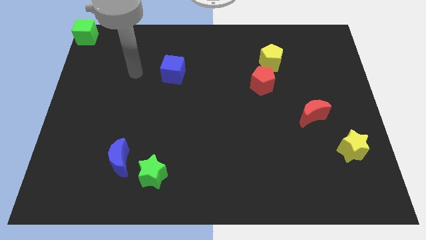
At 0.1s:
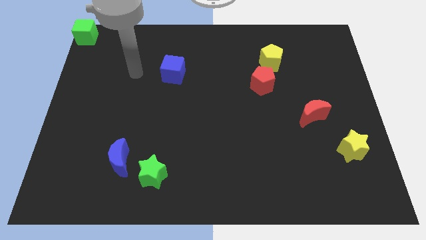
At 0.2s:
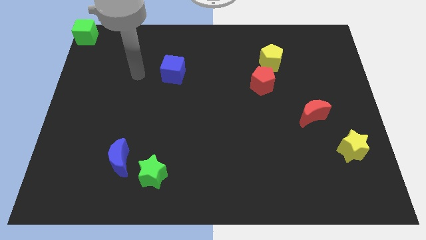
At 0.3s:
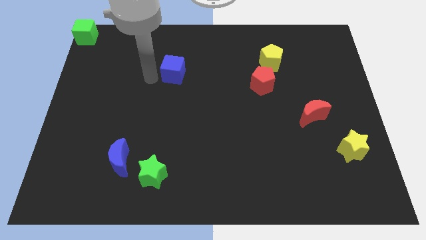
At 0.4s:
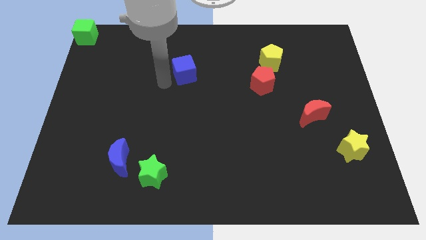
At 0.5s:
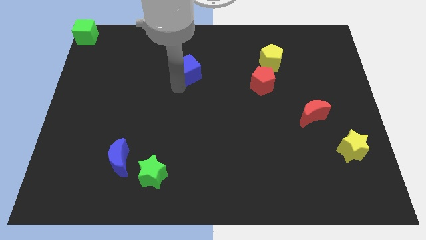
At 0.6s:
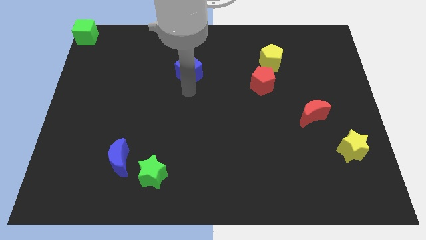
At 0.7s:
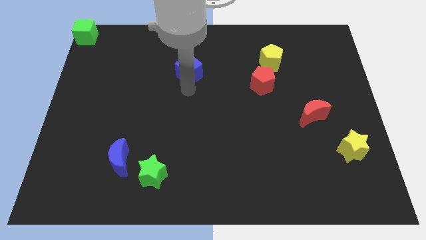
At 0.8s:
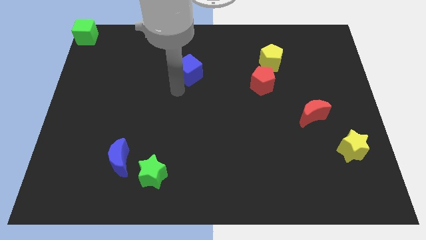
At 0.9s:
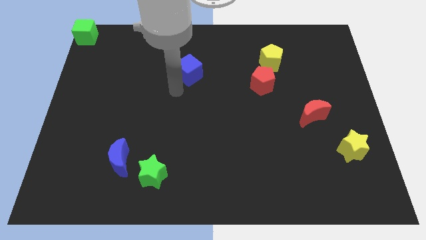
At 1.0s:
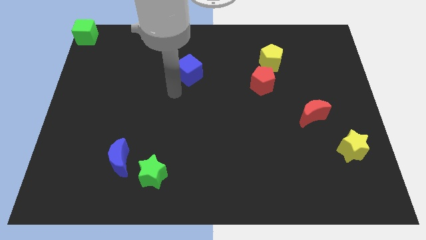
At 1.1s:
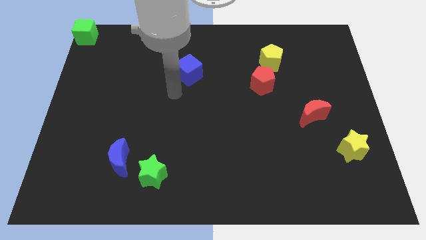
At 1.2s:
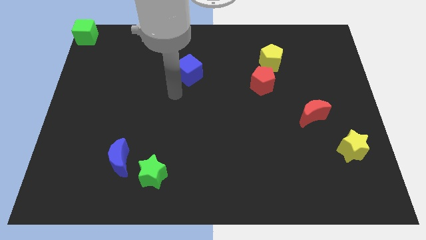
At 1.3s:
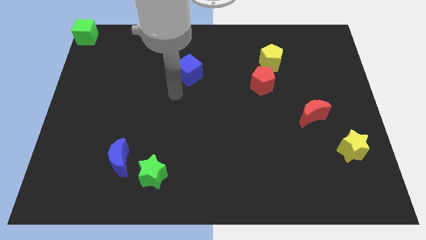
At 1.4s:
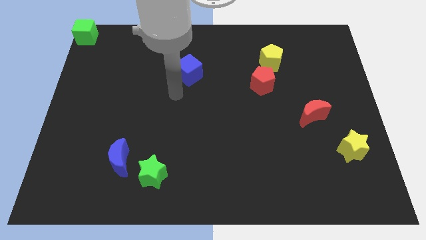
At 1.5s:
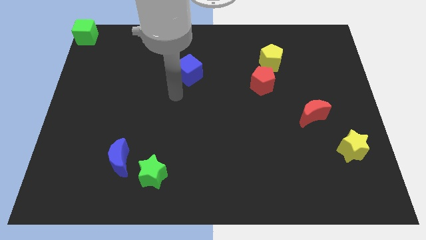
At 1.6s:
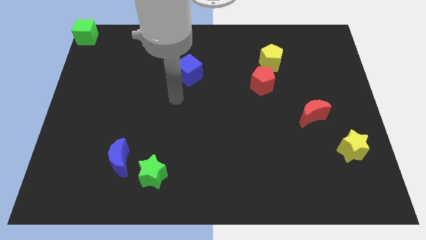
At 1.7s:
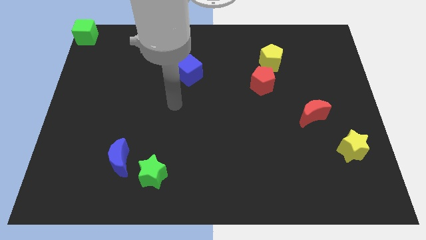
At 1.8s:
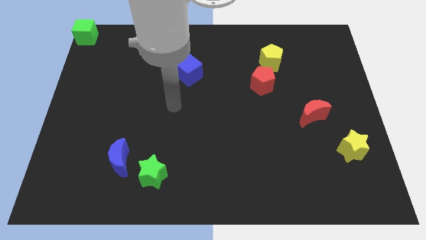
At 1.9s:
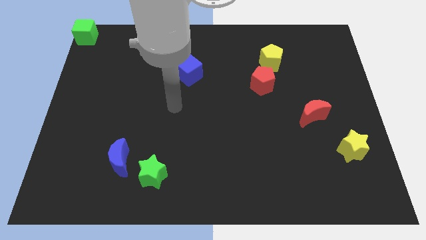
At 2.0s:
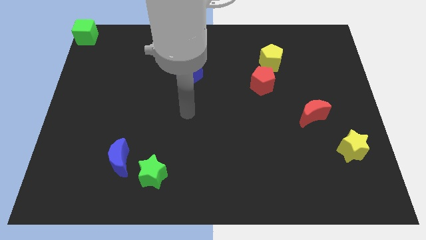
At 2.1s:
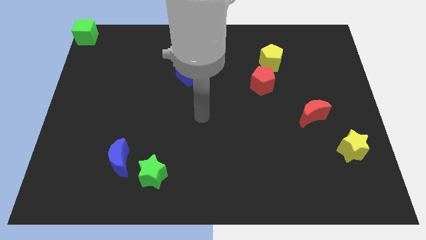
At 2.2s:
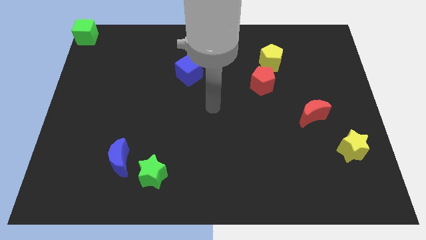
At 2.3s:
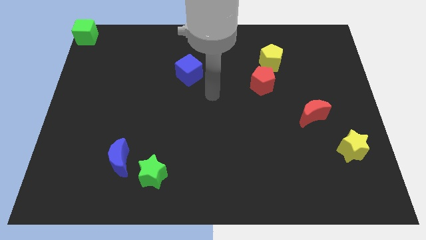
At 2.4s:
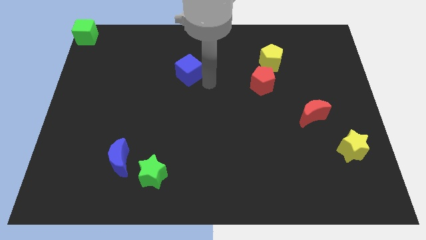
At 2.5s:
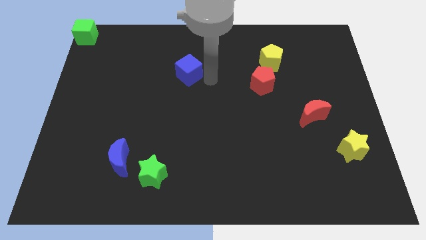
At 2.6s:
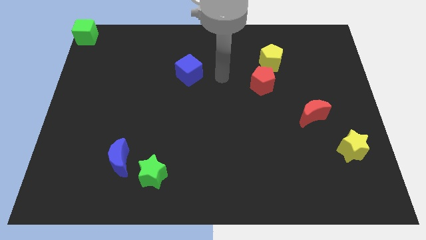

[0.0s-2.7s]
move the blue cube slightly to the right

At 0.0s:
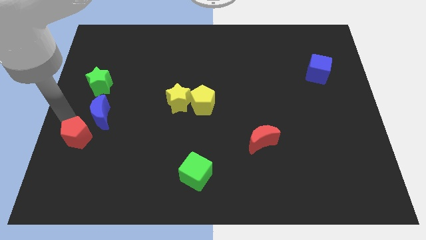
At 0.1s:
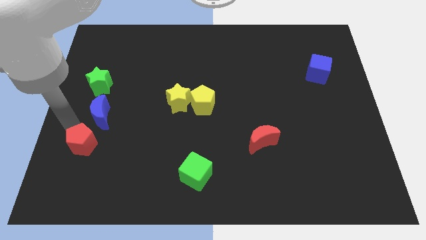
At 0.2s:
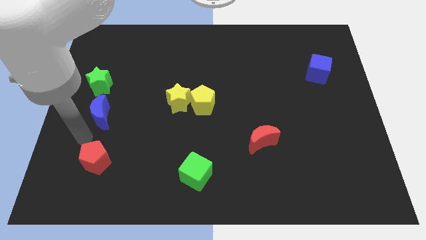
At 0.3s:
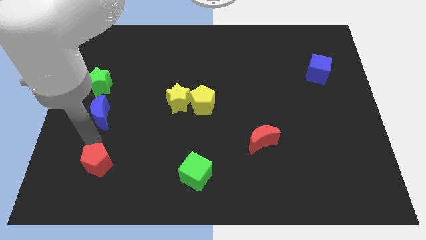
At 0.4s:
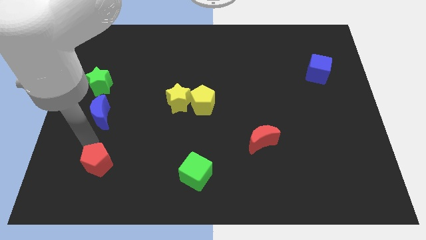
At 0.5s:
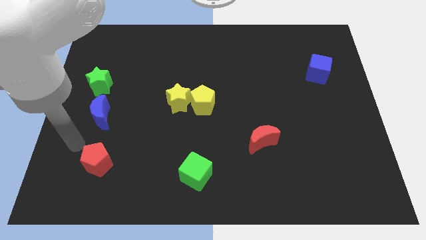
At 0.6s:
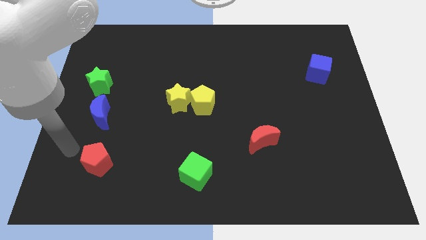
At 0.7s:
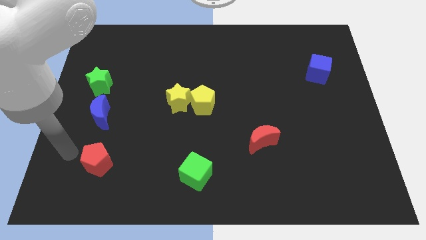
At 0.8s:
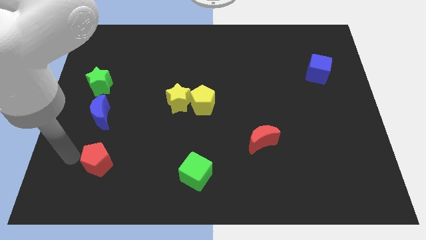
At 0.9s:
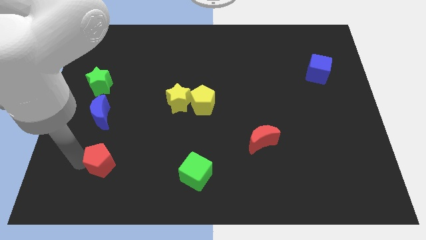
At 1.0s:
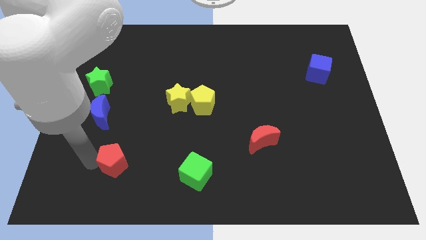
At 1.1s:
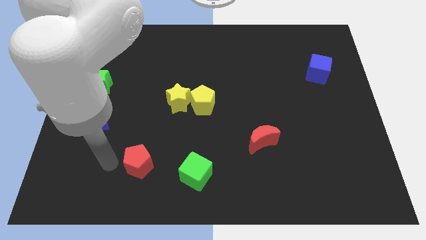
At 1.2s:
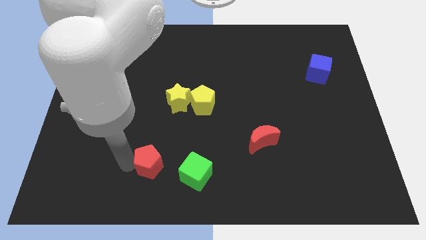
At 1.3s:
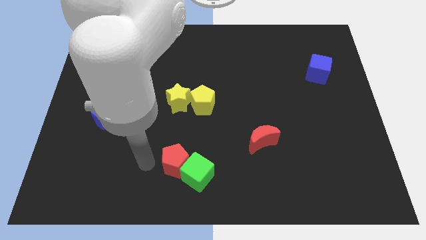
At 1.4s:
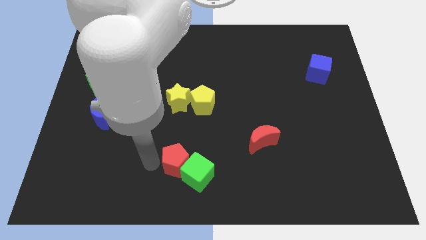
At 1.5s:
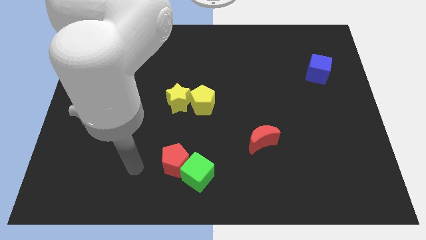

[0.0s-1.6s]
move the red pentagon into the green cube

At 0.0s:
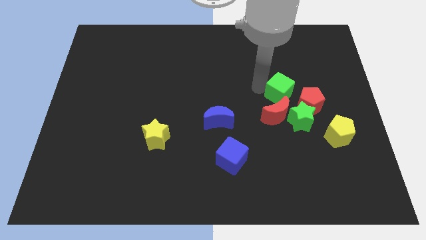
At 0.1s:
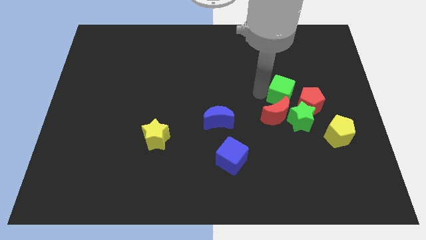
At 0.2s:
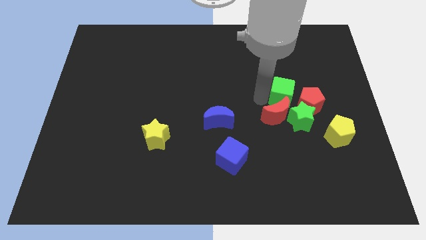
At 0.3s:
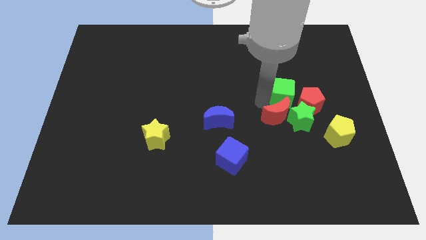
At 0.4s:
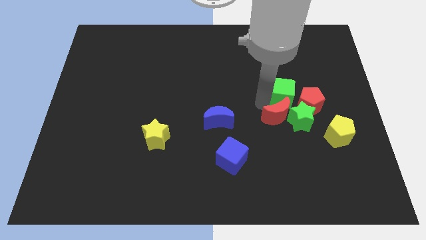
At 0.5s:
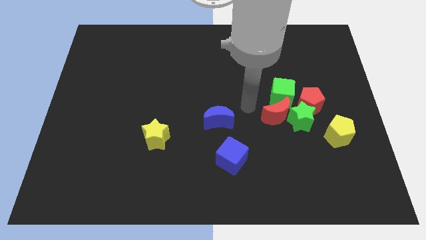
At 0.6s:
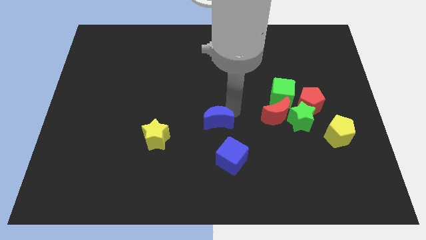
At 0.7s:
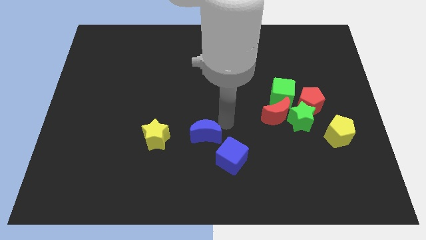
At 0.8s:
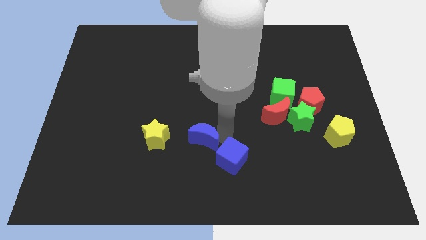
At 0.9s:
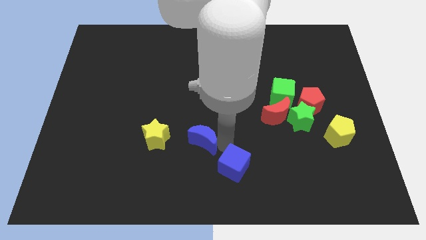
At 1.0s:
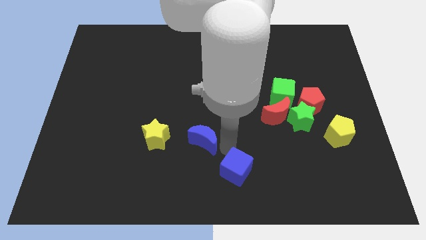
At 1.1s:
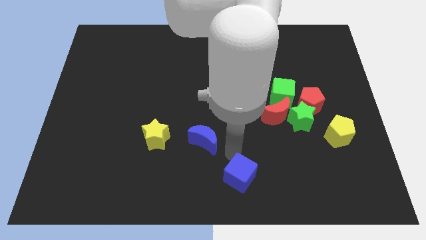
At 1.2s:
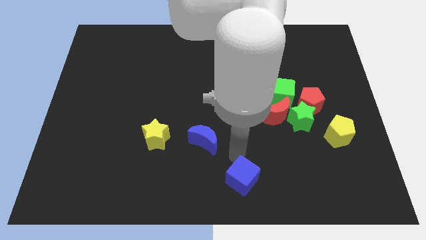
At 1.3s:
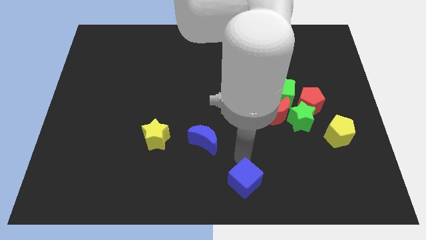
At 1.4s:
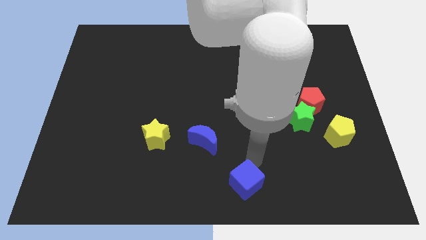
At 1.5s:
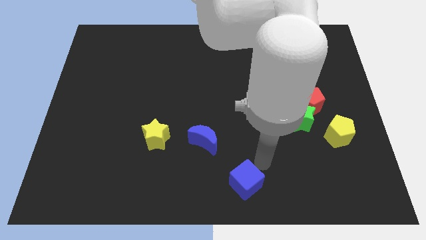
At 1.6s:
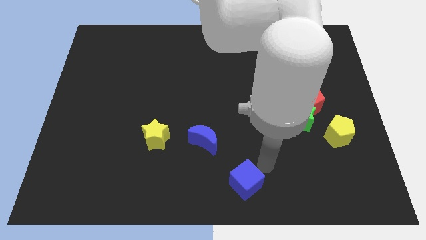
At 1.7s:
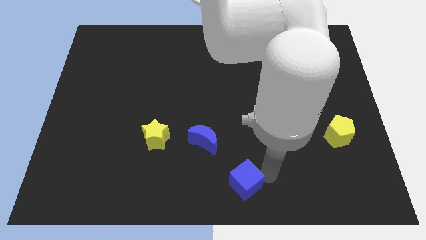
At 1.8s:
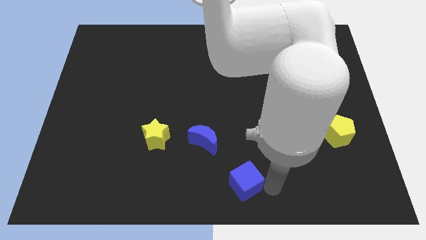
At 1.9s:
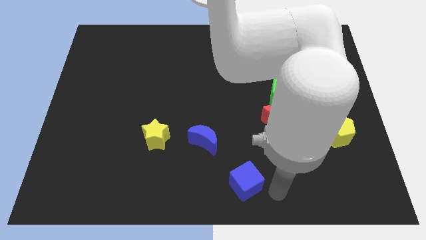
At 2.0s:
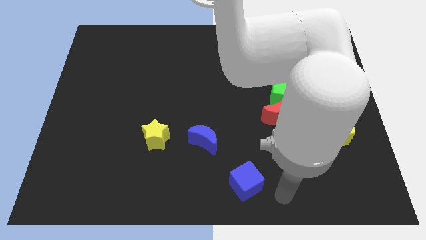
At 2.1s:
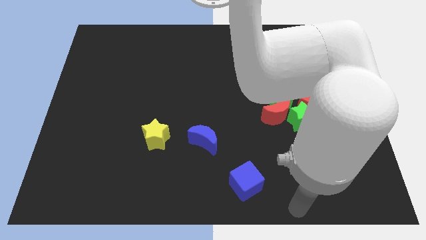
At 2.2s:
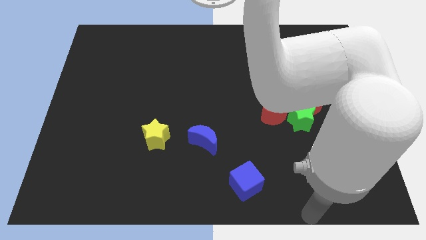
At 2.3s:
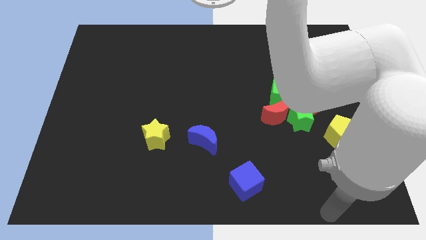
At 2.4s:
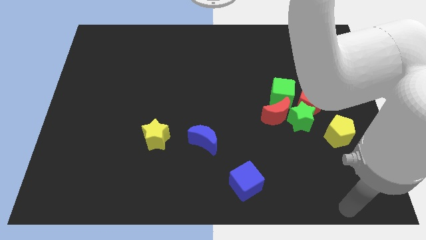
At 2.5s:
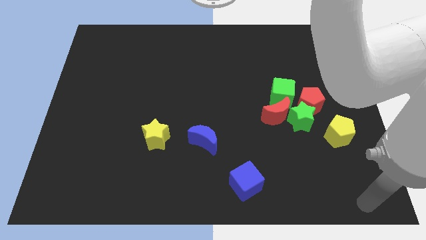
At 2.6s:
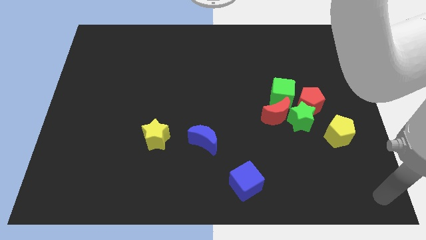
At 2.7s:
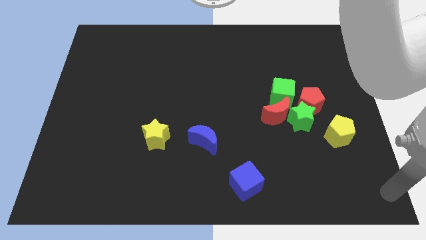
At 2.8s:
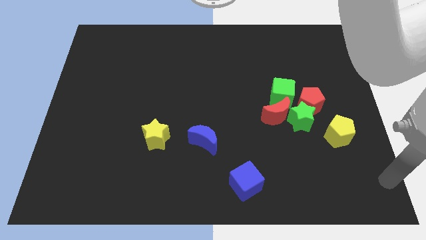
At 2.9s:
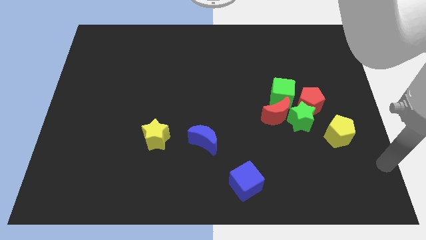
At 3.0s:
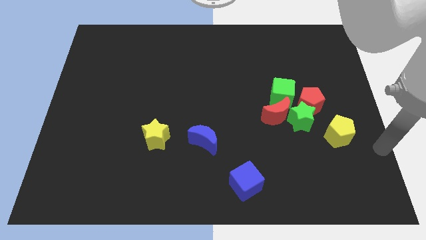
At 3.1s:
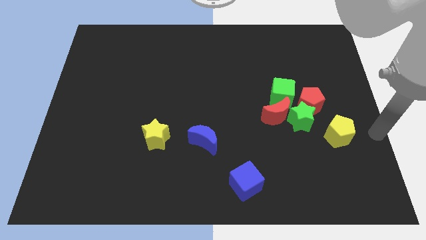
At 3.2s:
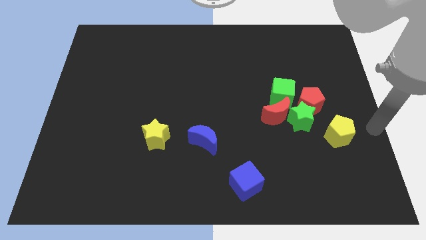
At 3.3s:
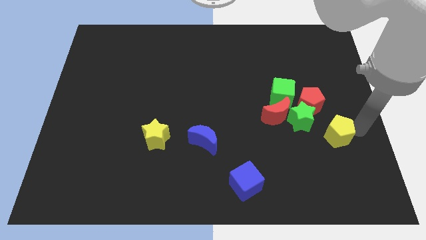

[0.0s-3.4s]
put your arm at the top right side of the yellow pentagon

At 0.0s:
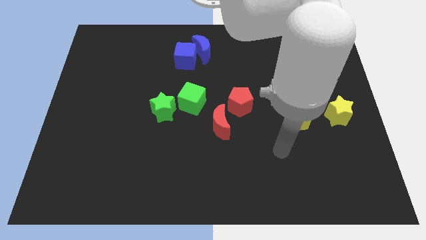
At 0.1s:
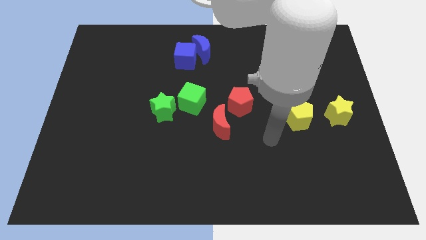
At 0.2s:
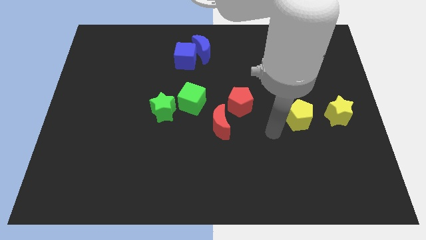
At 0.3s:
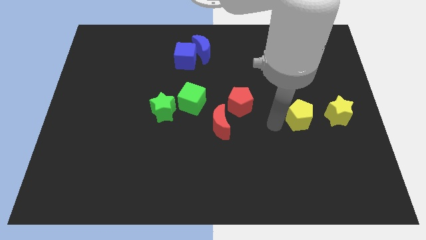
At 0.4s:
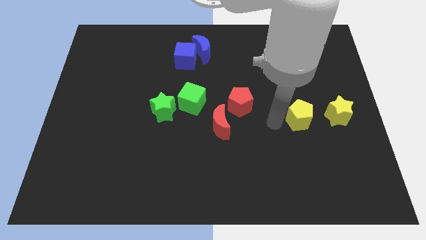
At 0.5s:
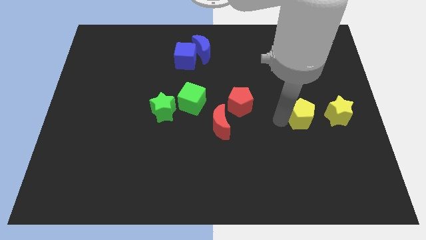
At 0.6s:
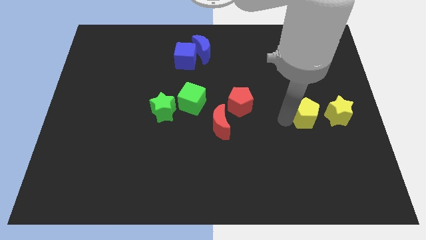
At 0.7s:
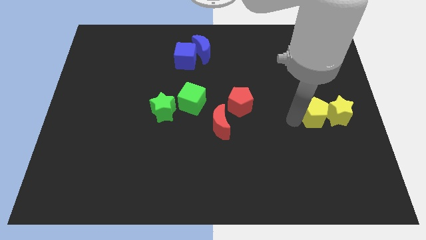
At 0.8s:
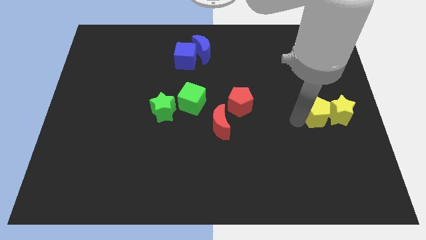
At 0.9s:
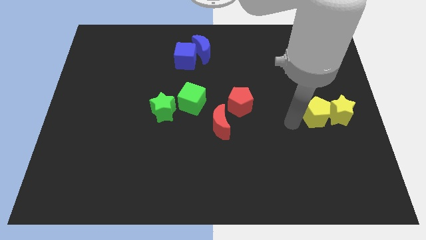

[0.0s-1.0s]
push yellow pentagon in to yellow star

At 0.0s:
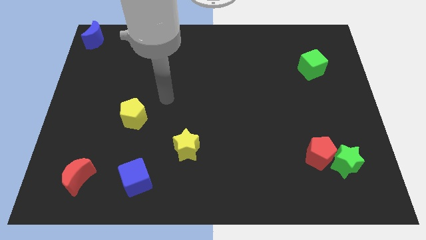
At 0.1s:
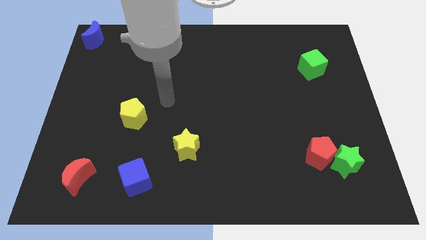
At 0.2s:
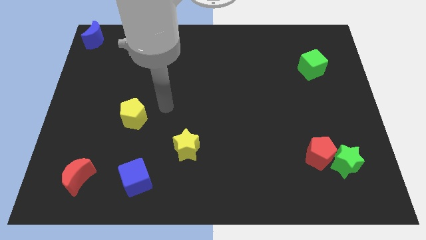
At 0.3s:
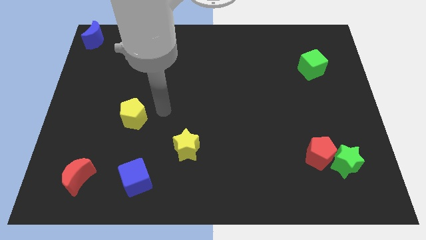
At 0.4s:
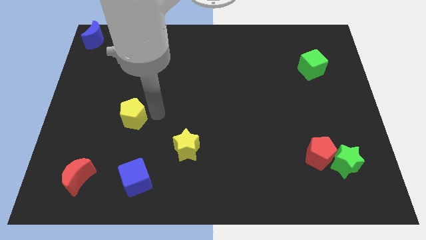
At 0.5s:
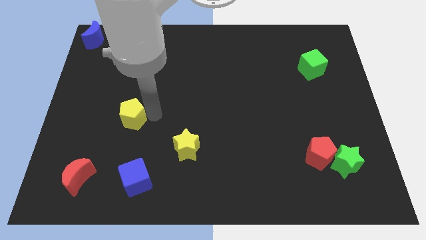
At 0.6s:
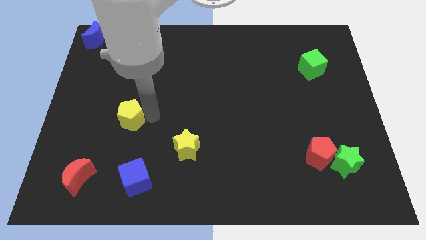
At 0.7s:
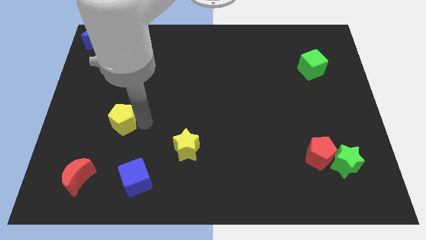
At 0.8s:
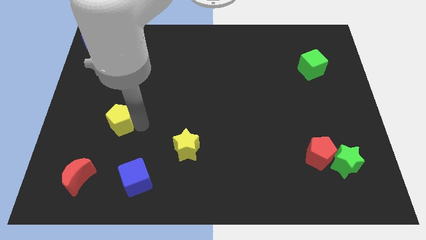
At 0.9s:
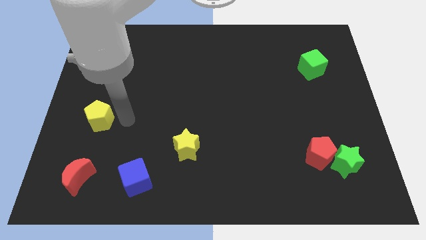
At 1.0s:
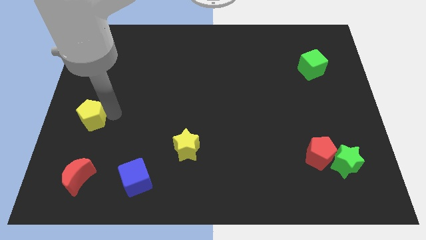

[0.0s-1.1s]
move the yellow pentagon to the center left
